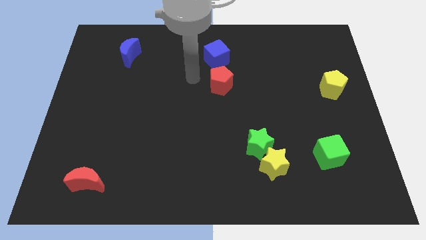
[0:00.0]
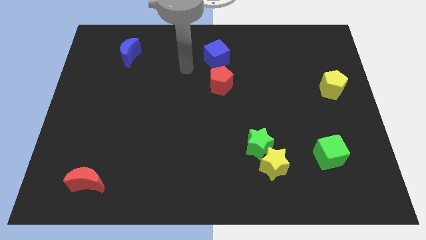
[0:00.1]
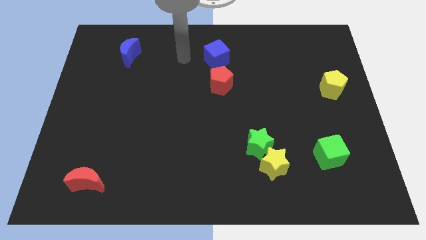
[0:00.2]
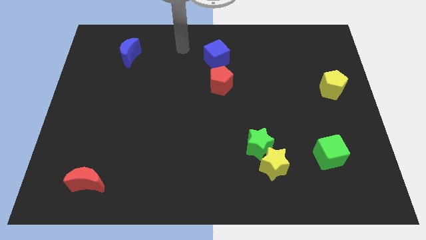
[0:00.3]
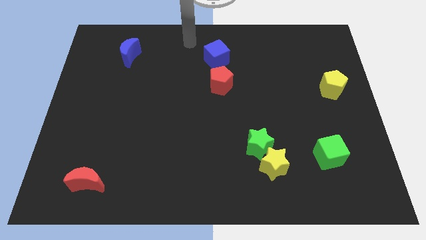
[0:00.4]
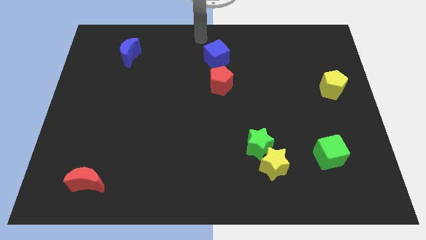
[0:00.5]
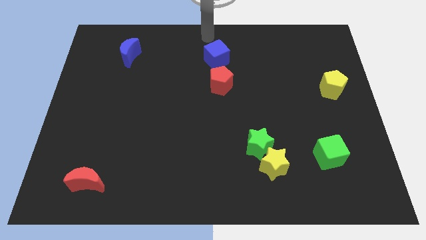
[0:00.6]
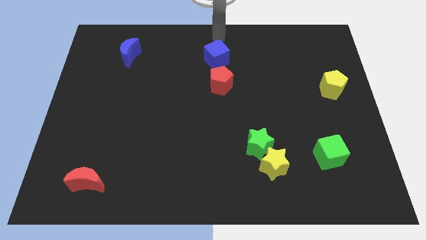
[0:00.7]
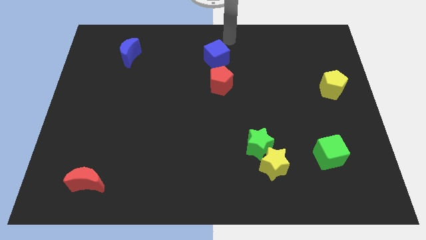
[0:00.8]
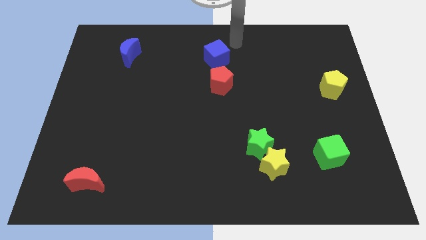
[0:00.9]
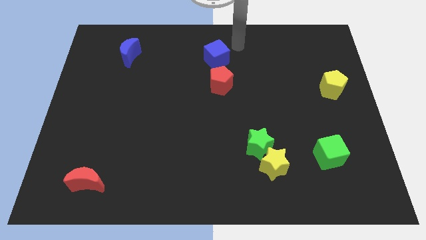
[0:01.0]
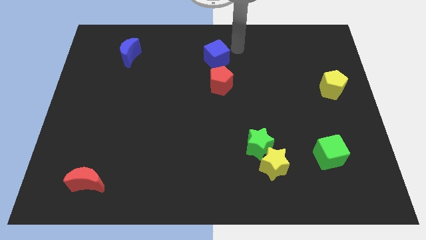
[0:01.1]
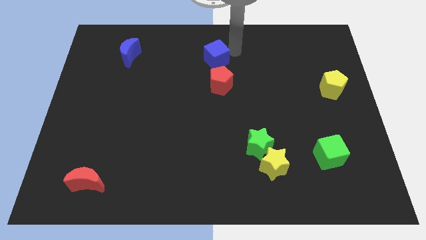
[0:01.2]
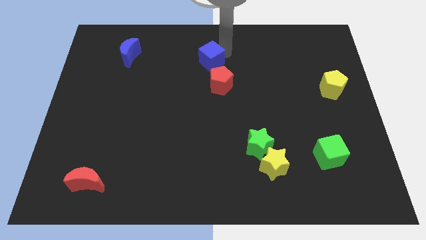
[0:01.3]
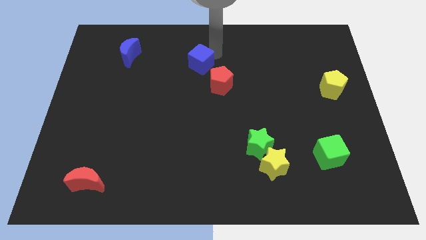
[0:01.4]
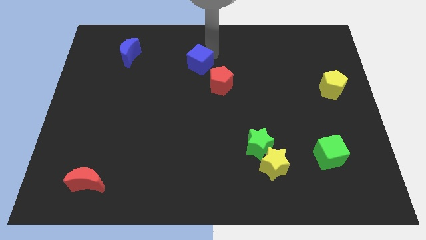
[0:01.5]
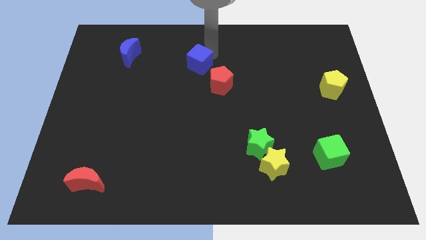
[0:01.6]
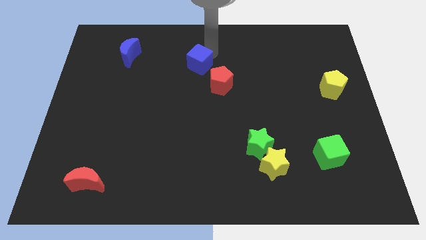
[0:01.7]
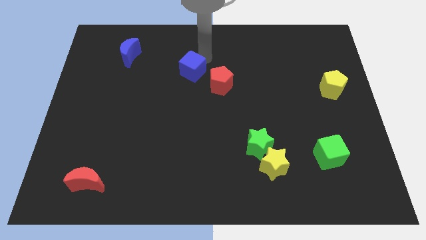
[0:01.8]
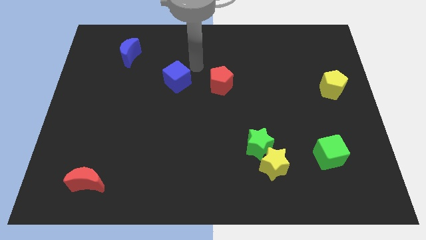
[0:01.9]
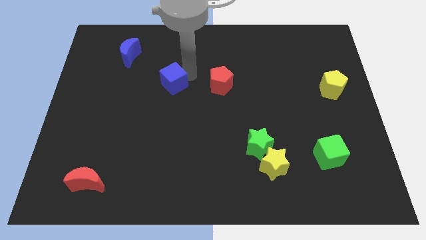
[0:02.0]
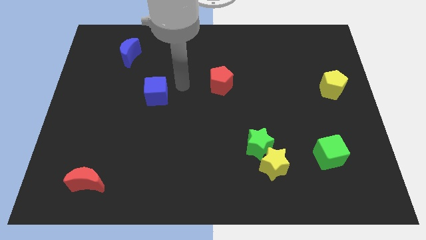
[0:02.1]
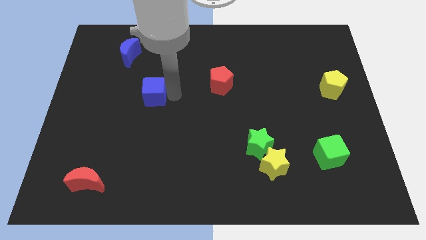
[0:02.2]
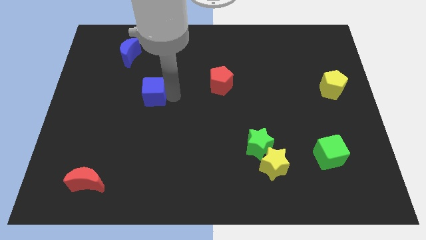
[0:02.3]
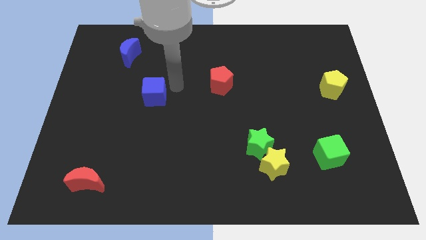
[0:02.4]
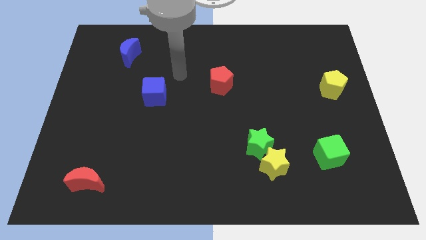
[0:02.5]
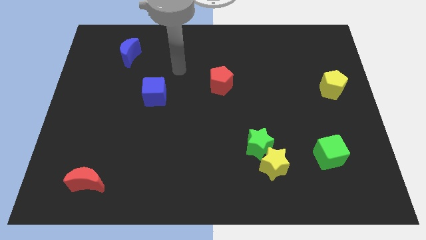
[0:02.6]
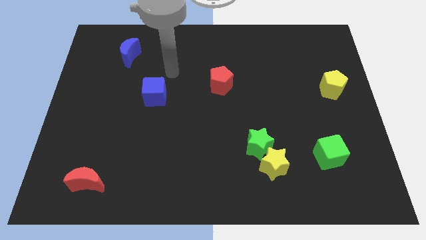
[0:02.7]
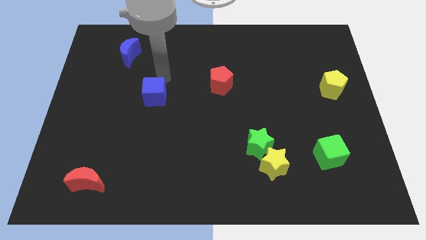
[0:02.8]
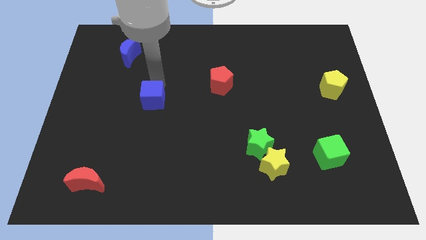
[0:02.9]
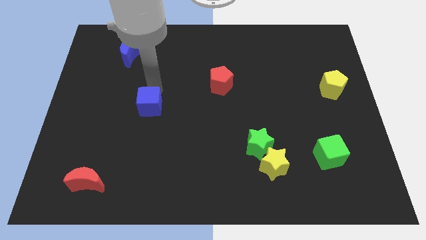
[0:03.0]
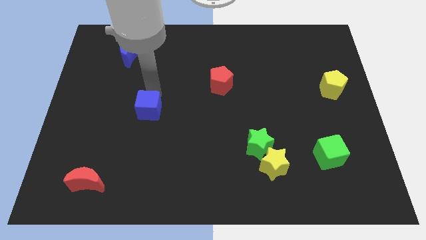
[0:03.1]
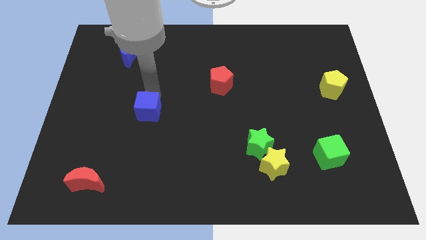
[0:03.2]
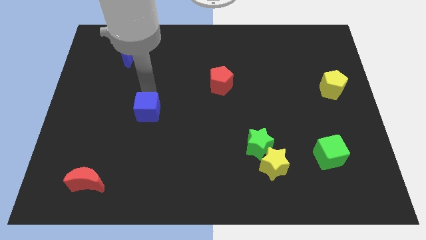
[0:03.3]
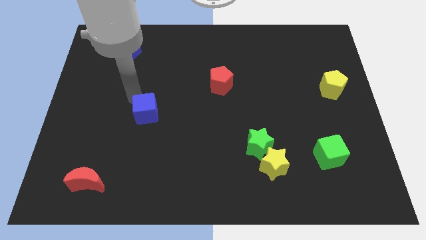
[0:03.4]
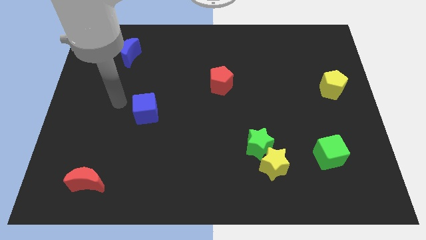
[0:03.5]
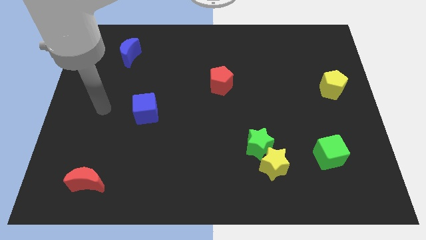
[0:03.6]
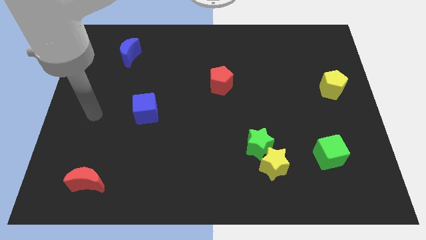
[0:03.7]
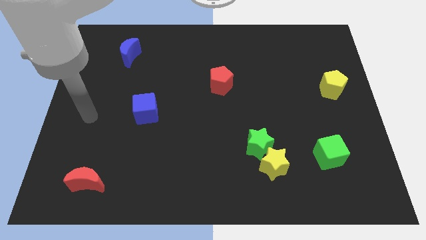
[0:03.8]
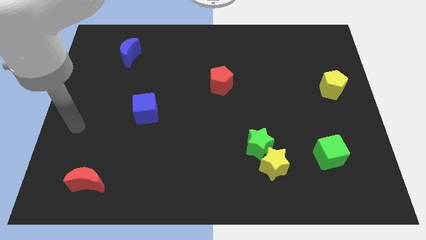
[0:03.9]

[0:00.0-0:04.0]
move the blue cube to the diagonal top right side of the red moon

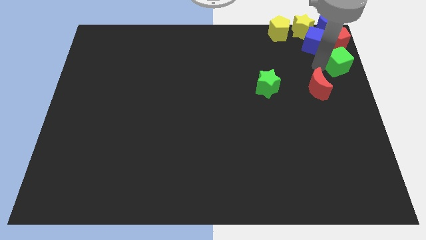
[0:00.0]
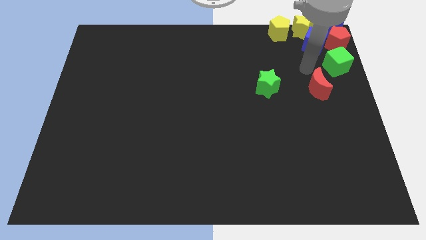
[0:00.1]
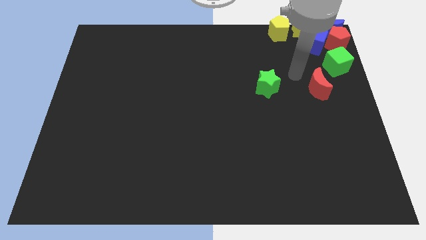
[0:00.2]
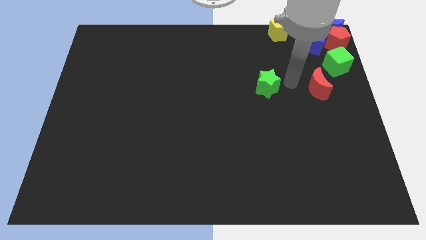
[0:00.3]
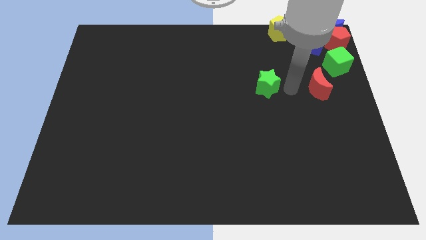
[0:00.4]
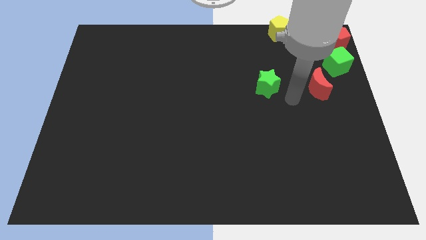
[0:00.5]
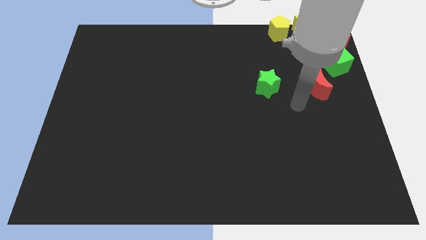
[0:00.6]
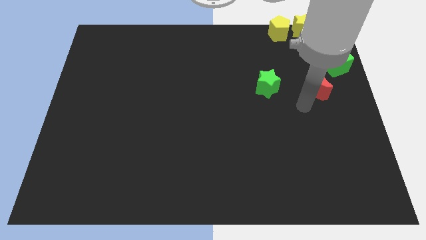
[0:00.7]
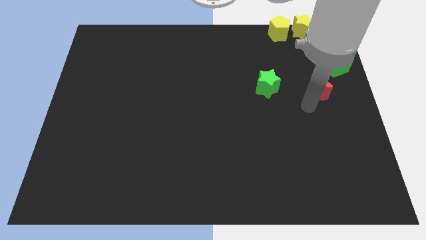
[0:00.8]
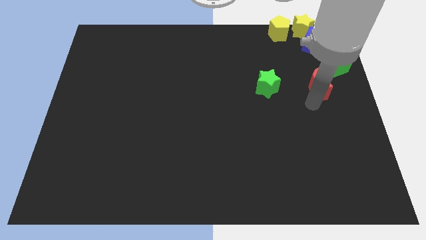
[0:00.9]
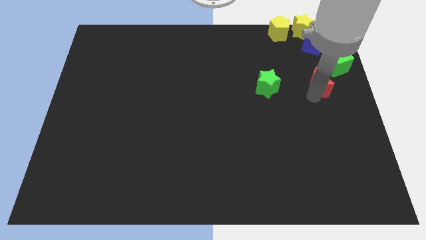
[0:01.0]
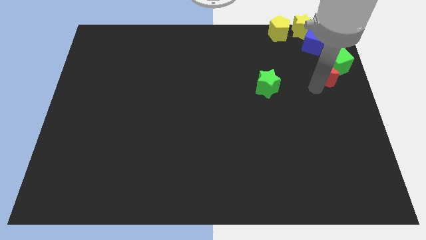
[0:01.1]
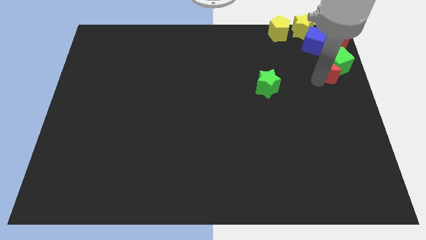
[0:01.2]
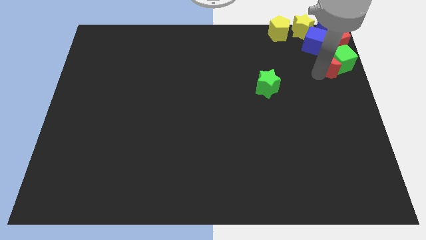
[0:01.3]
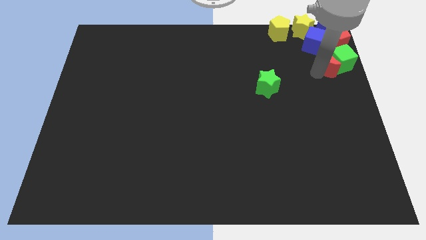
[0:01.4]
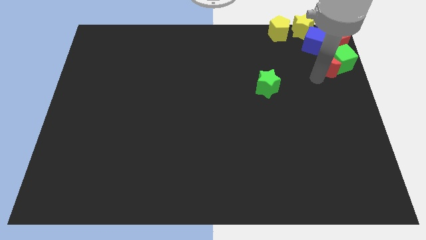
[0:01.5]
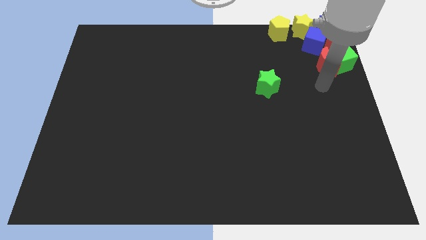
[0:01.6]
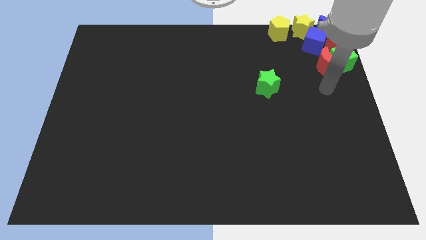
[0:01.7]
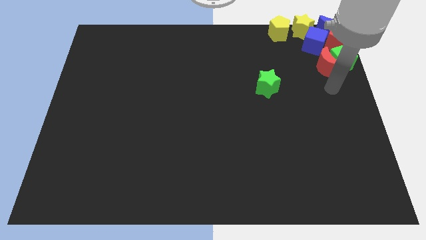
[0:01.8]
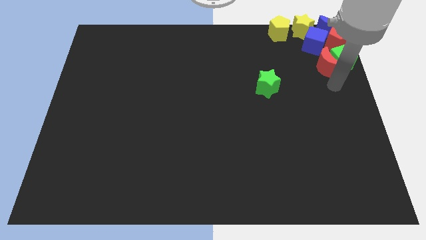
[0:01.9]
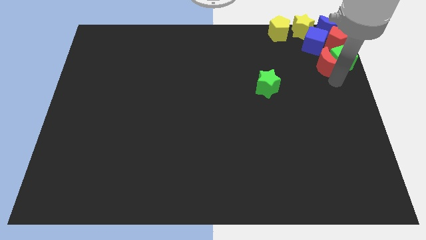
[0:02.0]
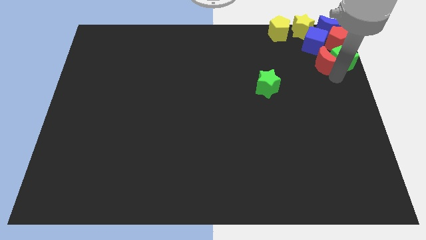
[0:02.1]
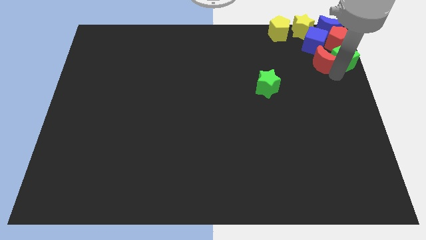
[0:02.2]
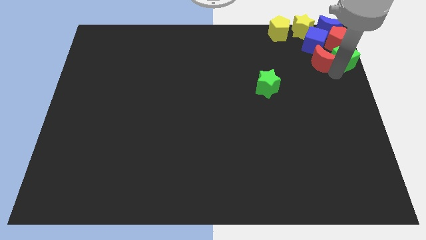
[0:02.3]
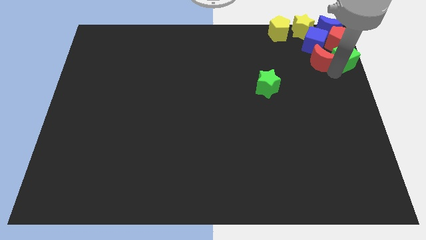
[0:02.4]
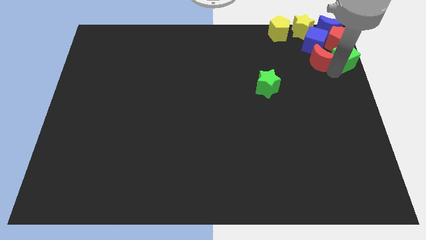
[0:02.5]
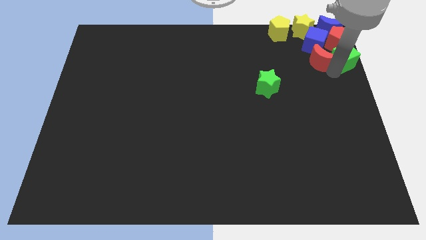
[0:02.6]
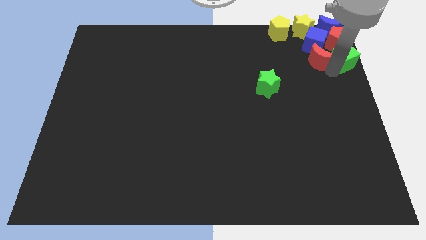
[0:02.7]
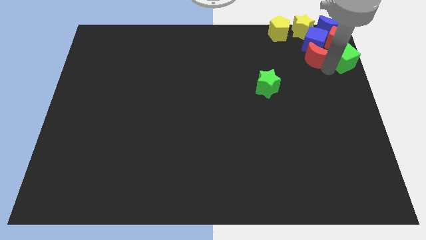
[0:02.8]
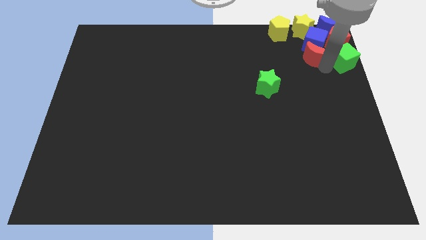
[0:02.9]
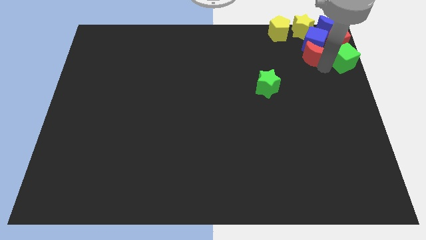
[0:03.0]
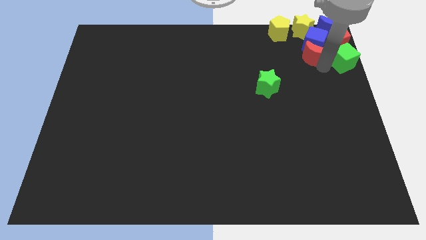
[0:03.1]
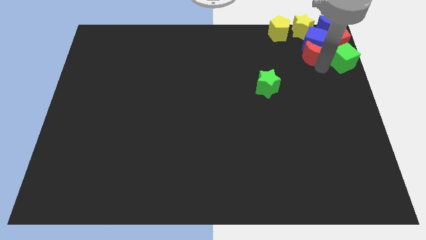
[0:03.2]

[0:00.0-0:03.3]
push the red crescent into the bottom side of the blue cube

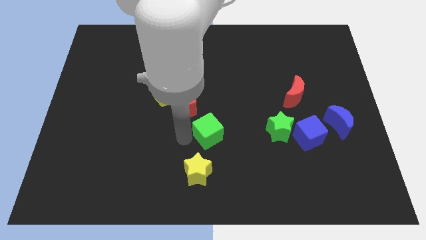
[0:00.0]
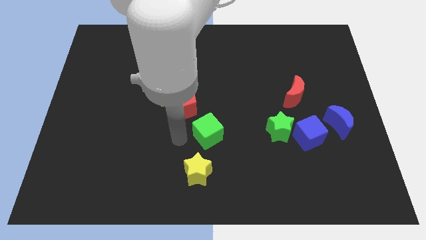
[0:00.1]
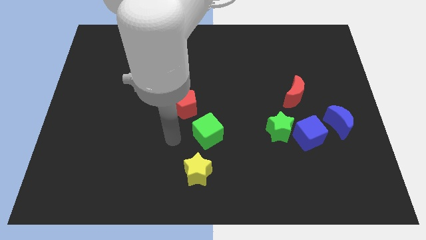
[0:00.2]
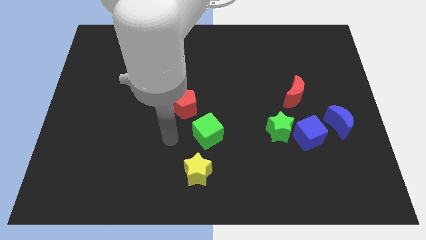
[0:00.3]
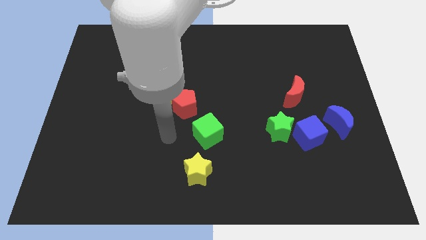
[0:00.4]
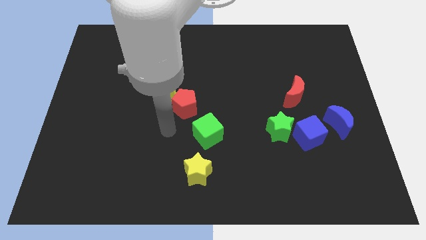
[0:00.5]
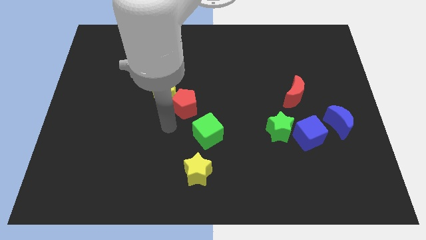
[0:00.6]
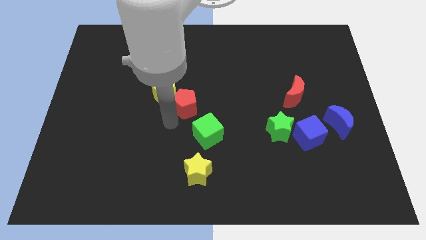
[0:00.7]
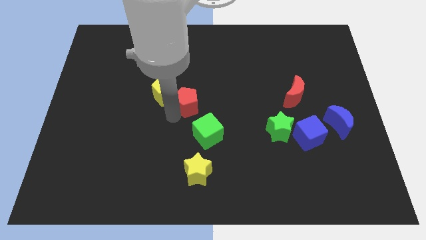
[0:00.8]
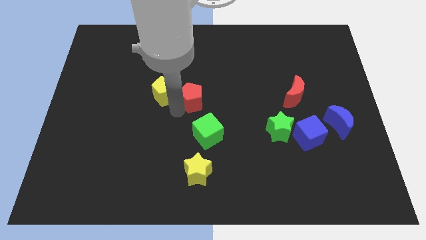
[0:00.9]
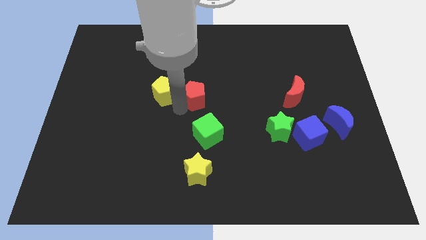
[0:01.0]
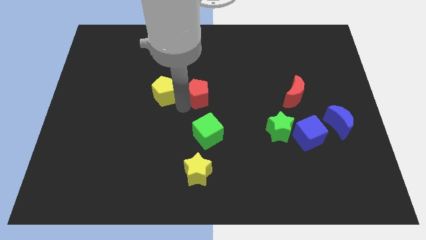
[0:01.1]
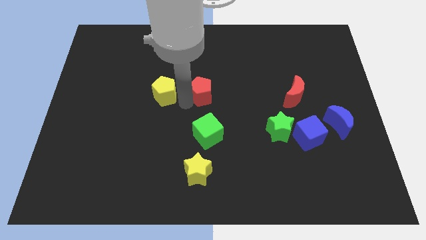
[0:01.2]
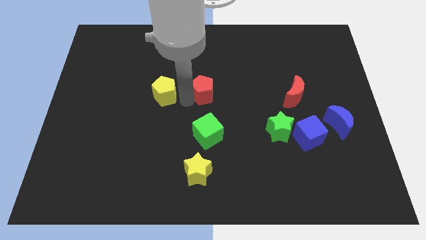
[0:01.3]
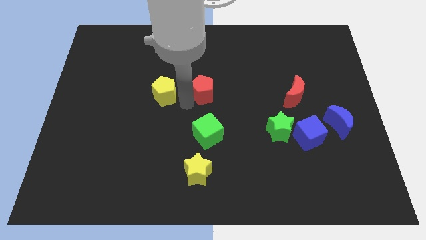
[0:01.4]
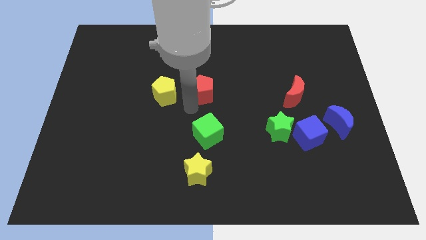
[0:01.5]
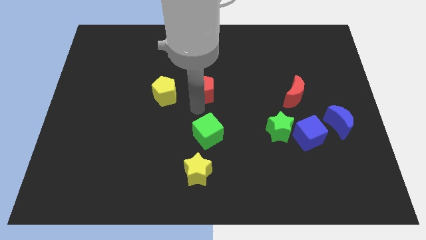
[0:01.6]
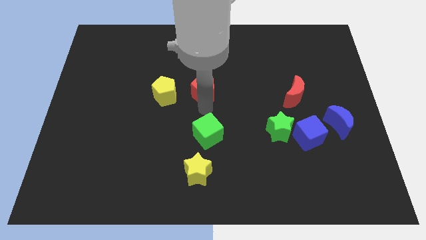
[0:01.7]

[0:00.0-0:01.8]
place the red pentagon to the right side of the yellow pentagon
